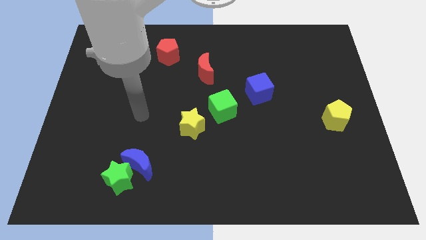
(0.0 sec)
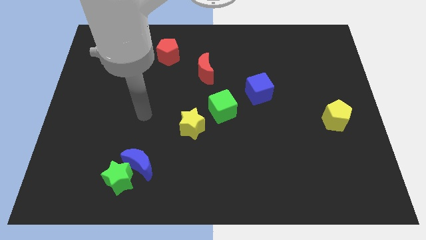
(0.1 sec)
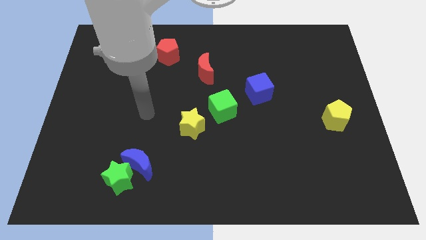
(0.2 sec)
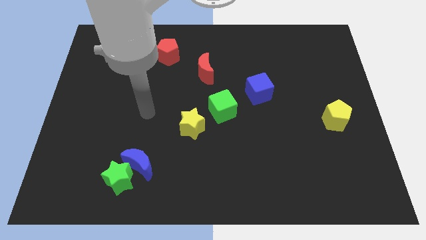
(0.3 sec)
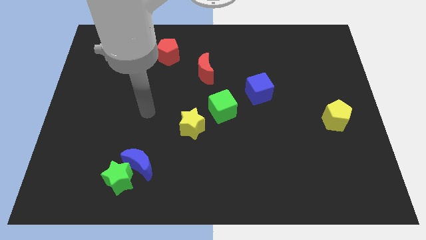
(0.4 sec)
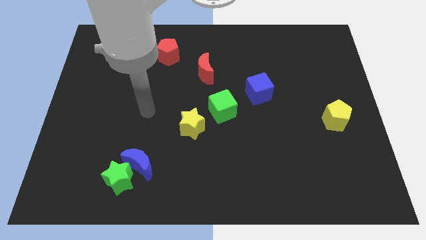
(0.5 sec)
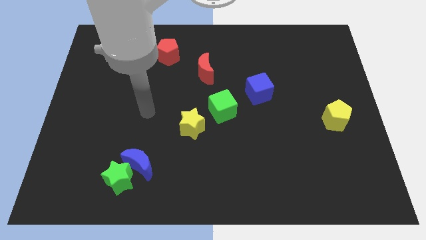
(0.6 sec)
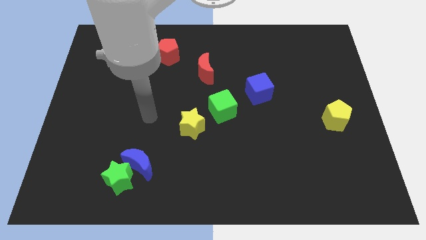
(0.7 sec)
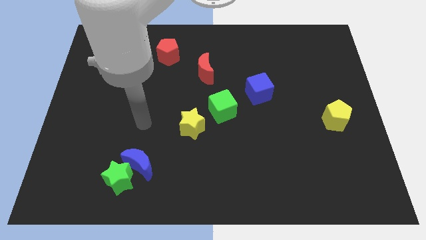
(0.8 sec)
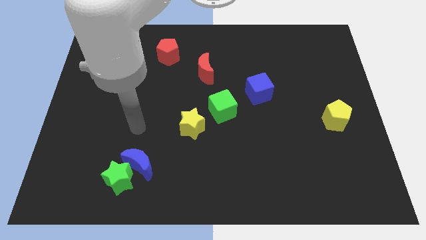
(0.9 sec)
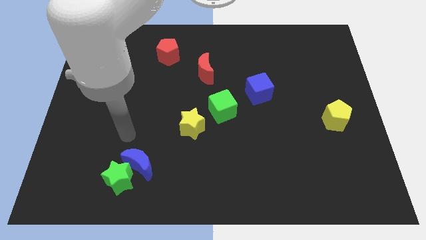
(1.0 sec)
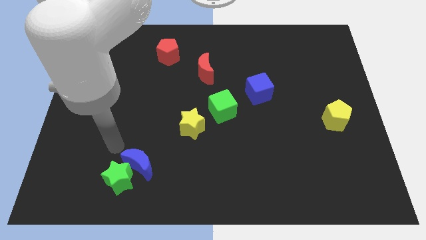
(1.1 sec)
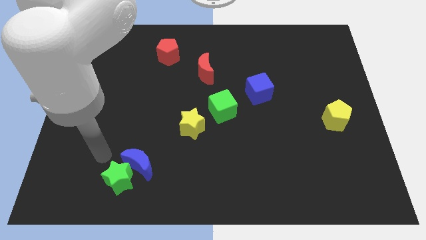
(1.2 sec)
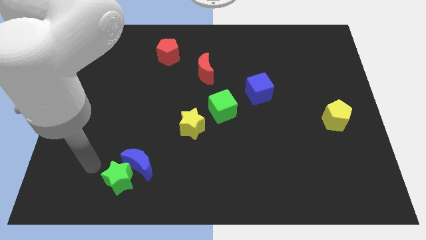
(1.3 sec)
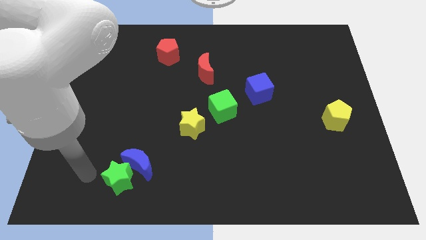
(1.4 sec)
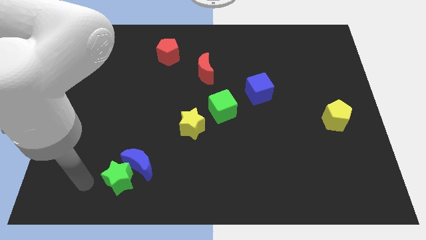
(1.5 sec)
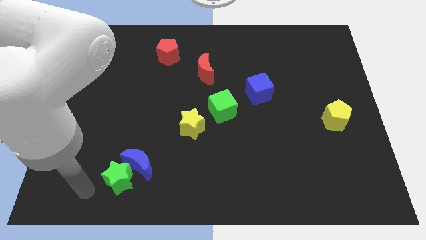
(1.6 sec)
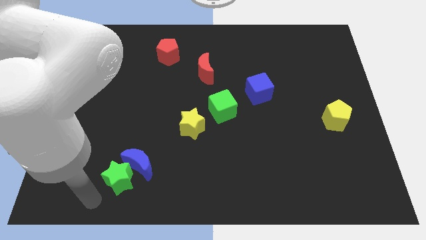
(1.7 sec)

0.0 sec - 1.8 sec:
move your arm below the green star

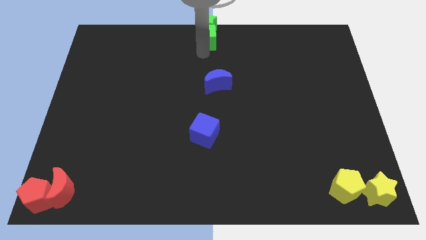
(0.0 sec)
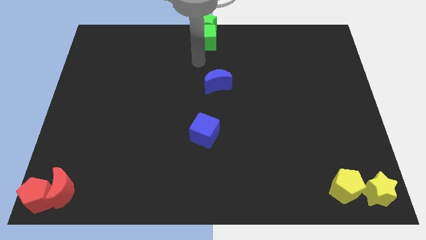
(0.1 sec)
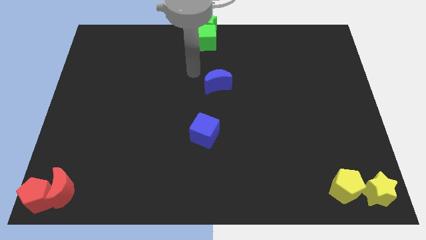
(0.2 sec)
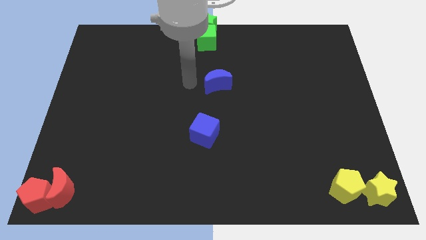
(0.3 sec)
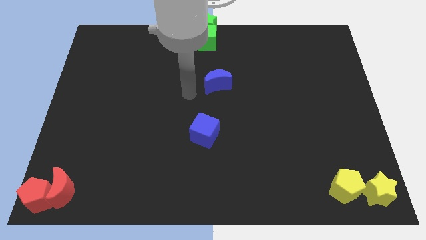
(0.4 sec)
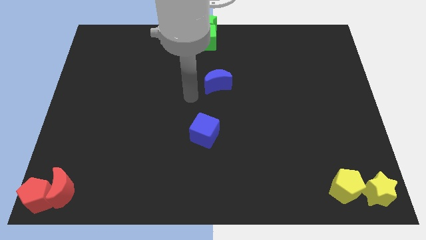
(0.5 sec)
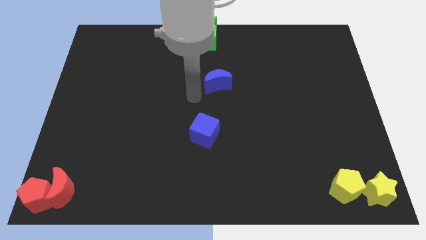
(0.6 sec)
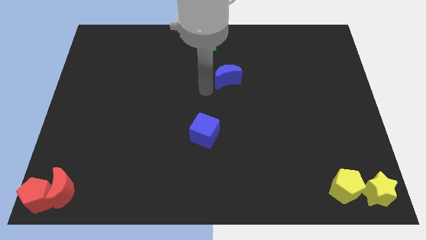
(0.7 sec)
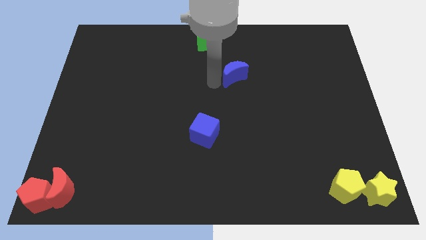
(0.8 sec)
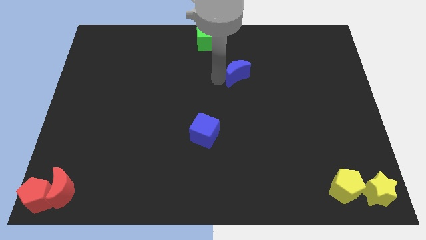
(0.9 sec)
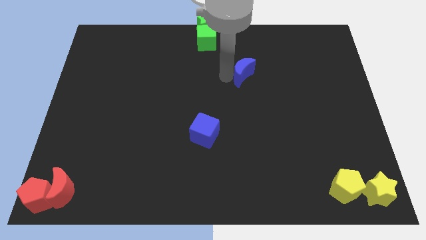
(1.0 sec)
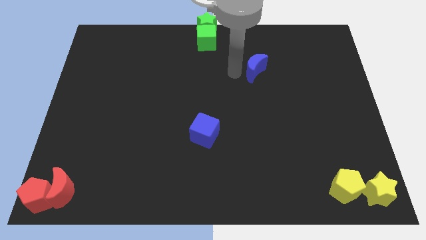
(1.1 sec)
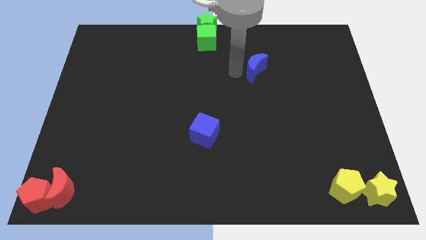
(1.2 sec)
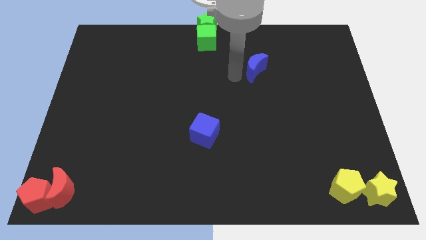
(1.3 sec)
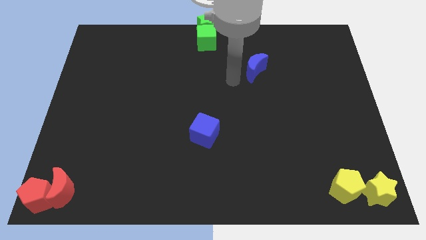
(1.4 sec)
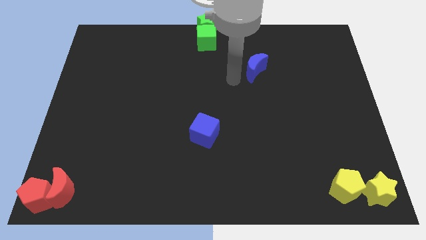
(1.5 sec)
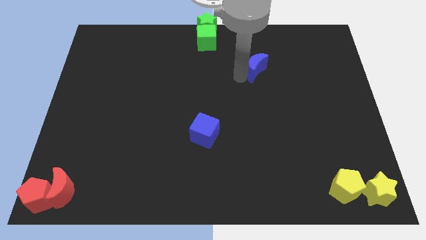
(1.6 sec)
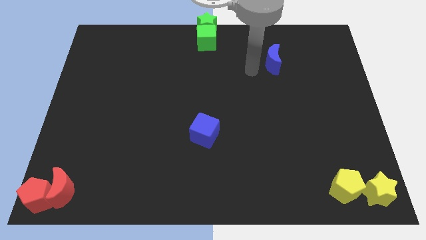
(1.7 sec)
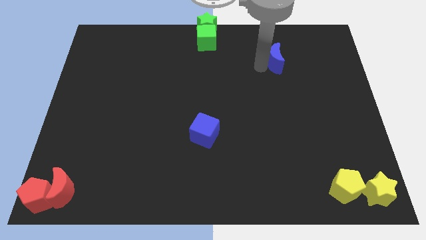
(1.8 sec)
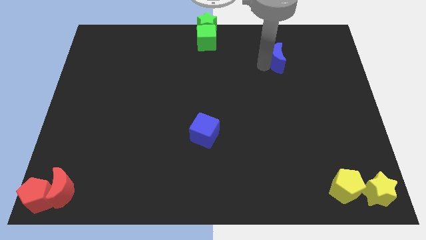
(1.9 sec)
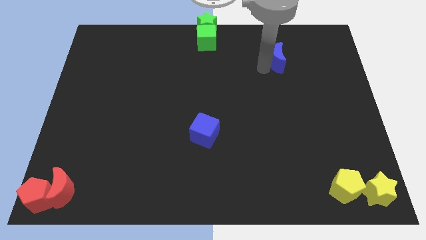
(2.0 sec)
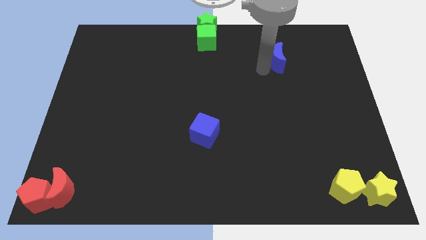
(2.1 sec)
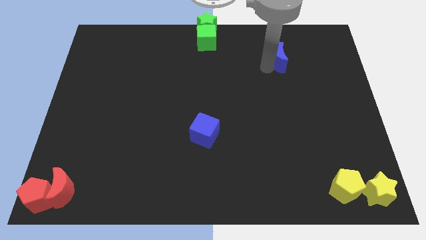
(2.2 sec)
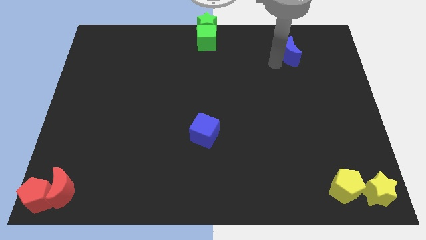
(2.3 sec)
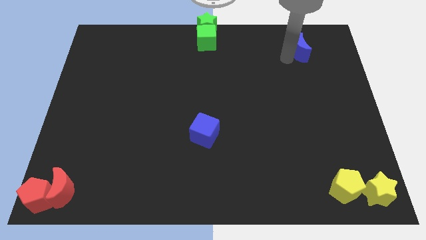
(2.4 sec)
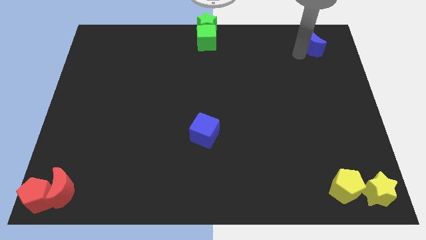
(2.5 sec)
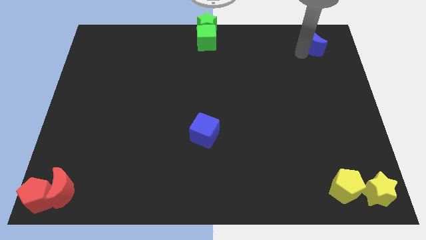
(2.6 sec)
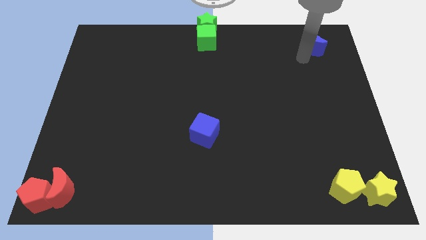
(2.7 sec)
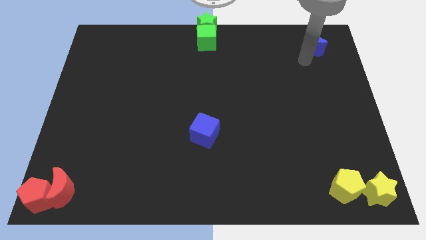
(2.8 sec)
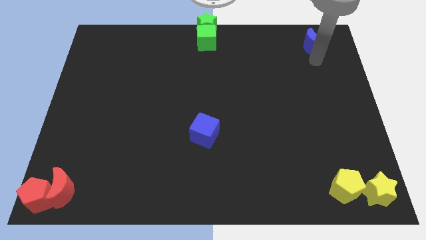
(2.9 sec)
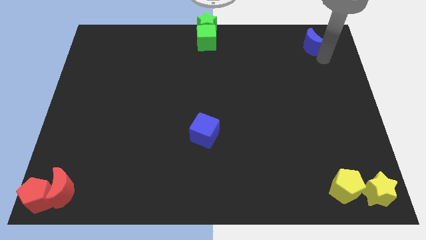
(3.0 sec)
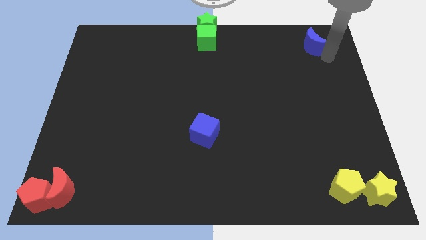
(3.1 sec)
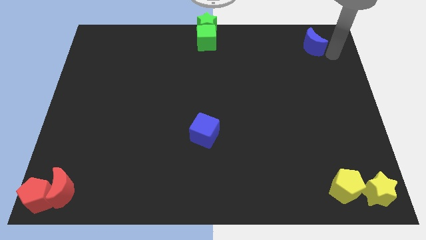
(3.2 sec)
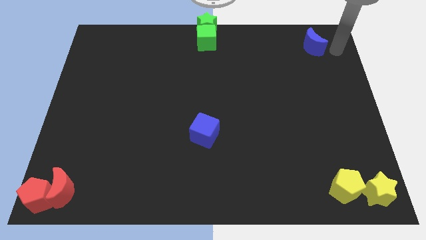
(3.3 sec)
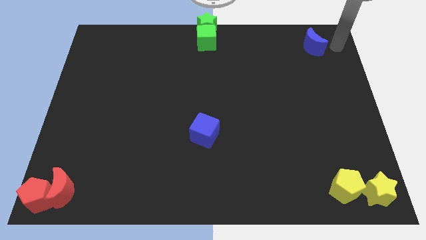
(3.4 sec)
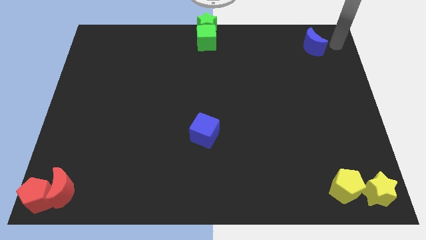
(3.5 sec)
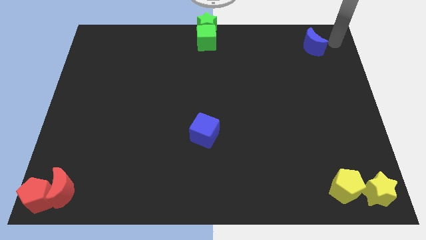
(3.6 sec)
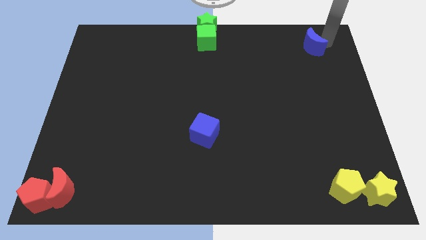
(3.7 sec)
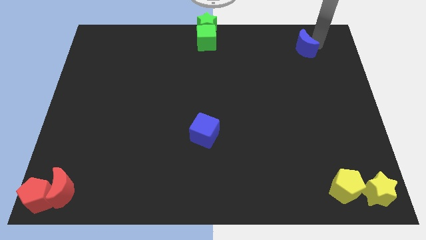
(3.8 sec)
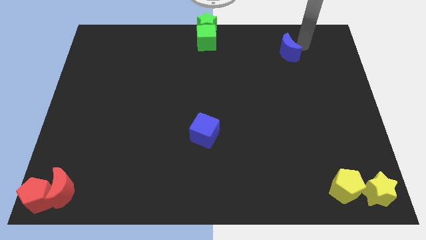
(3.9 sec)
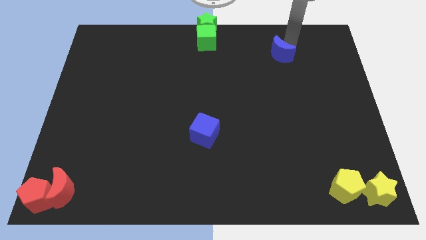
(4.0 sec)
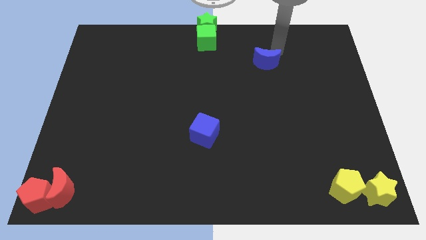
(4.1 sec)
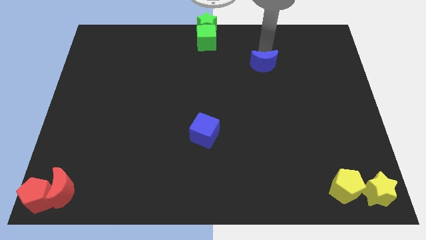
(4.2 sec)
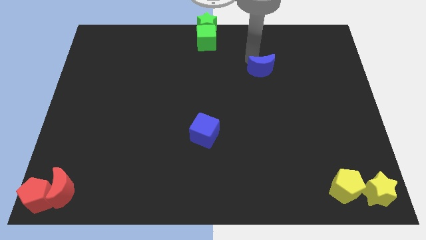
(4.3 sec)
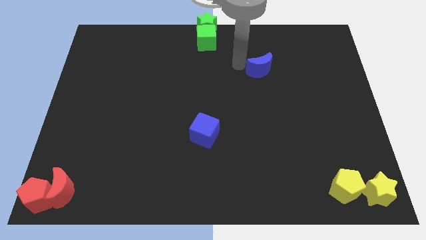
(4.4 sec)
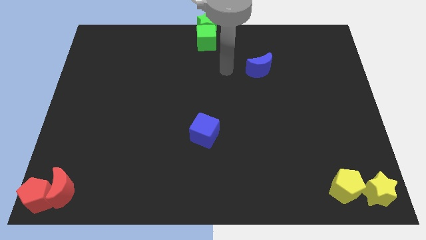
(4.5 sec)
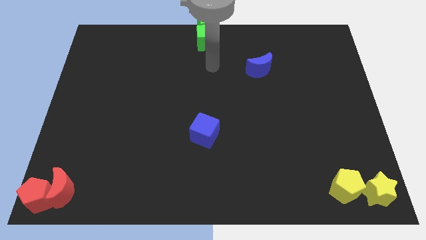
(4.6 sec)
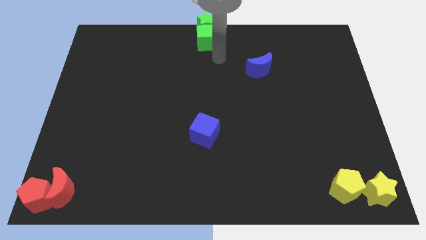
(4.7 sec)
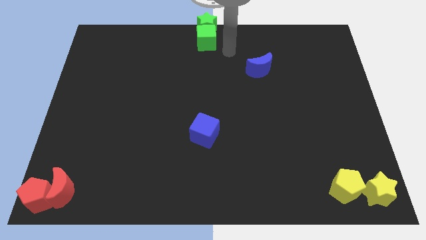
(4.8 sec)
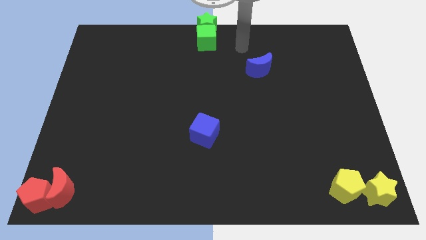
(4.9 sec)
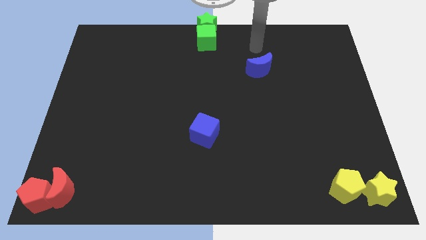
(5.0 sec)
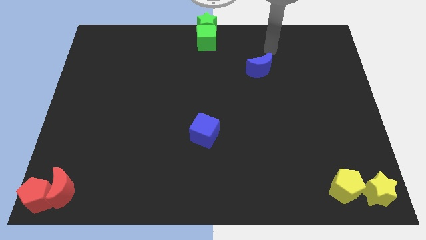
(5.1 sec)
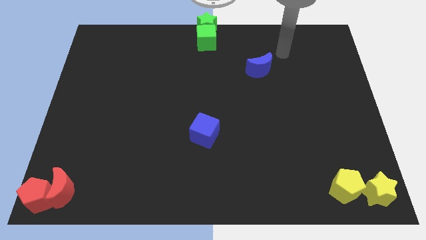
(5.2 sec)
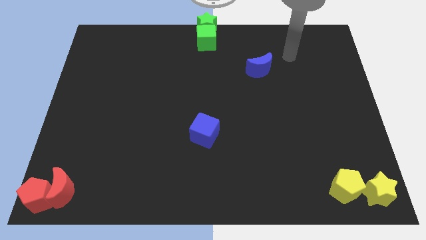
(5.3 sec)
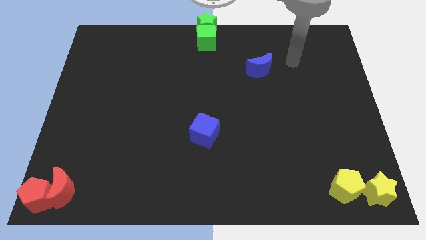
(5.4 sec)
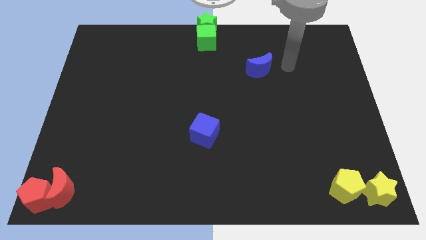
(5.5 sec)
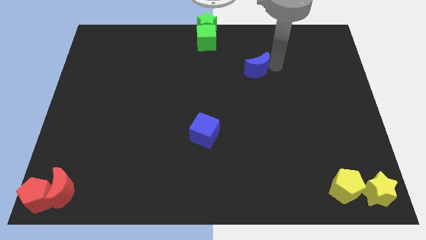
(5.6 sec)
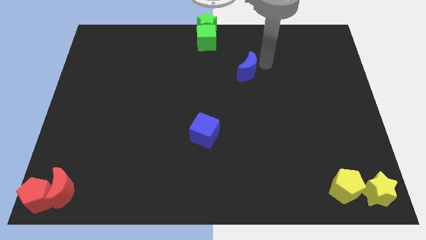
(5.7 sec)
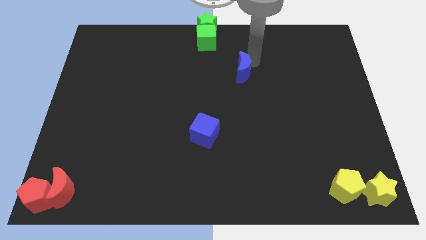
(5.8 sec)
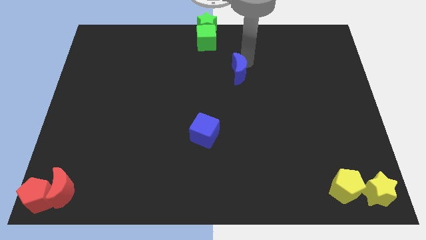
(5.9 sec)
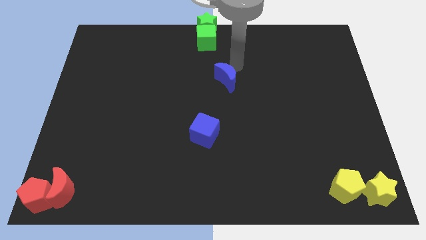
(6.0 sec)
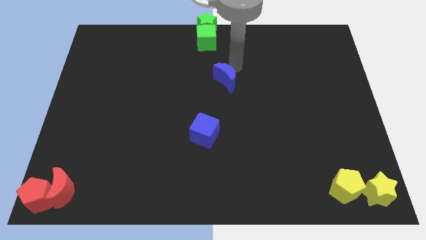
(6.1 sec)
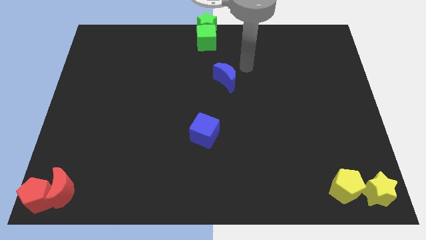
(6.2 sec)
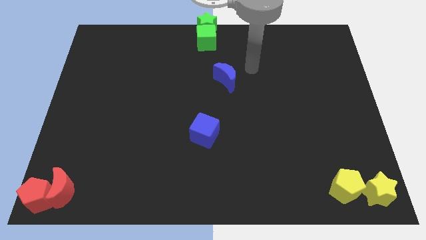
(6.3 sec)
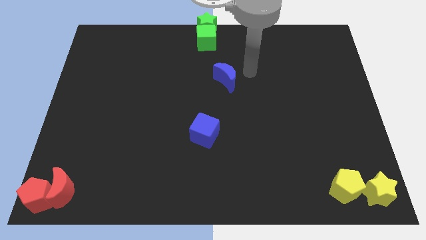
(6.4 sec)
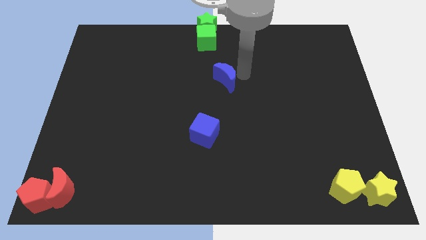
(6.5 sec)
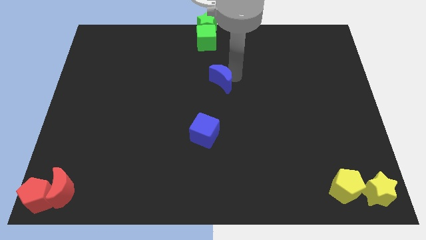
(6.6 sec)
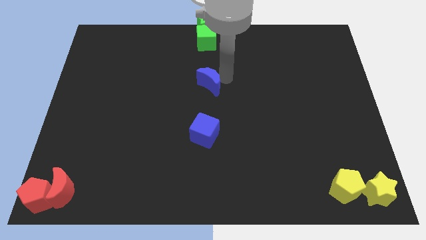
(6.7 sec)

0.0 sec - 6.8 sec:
move the blue moon in between the green cube and blue cube

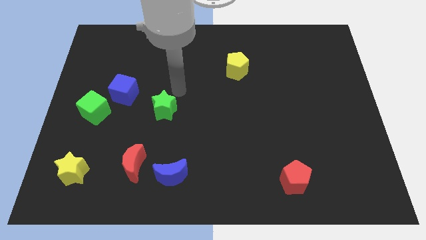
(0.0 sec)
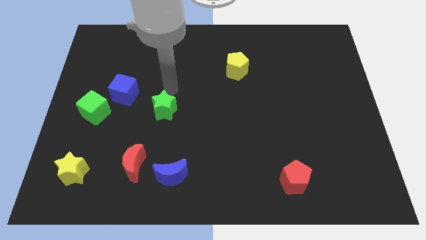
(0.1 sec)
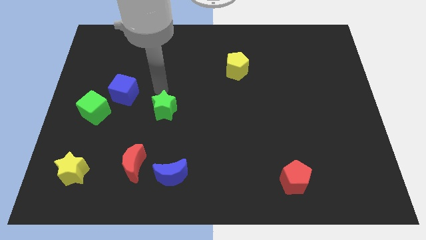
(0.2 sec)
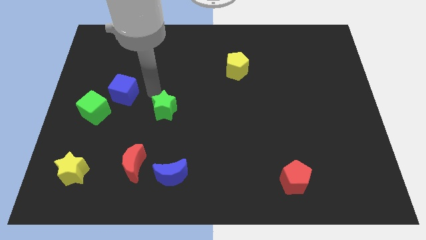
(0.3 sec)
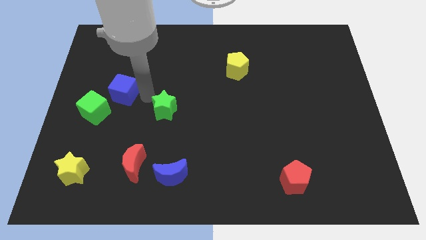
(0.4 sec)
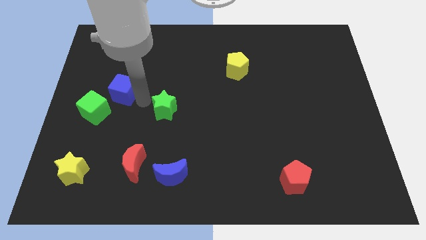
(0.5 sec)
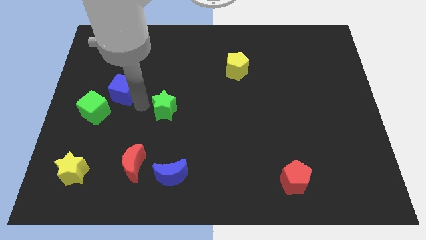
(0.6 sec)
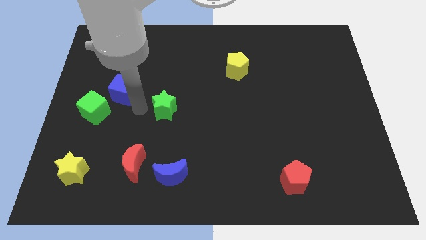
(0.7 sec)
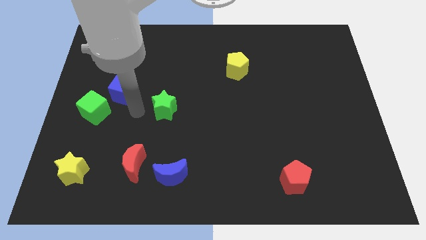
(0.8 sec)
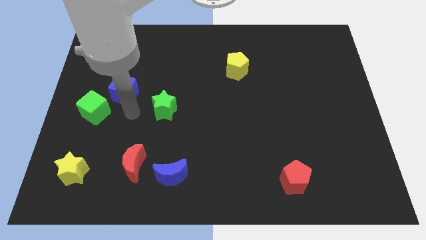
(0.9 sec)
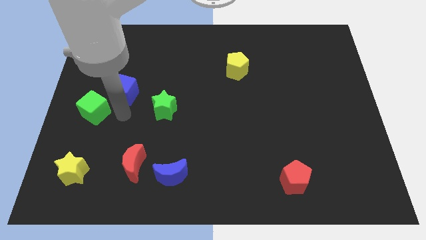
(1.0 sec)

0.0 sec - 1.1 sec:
point your hand at the bottom of the blue cube
